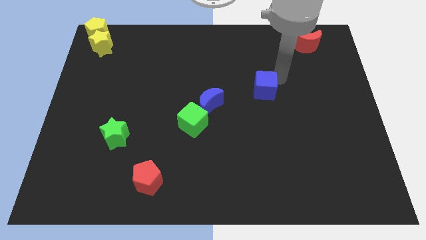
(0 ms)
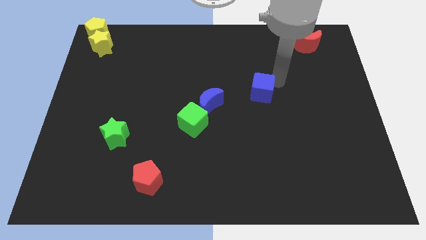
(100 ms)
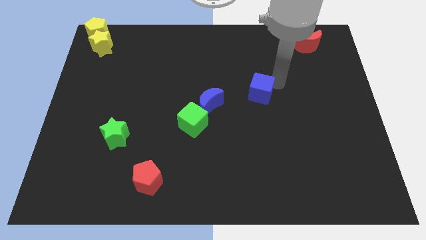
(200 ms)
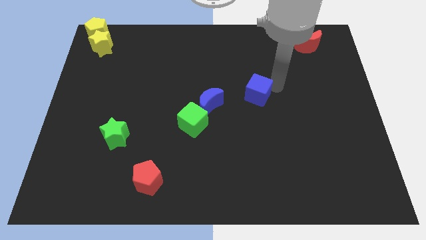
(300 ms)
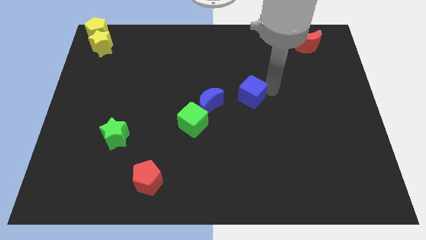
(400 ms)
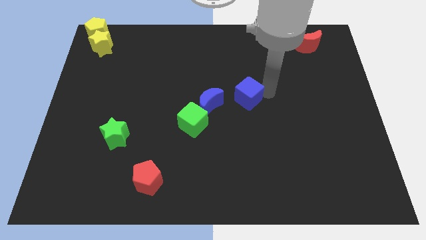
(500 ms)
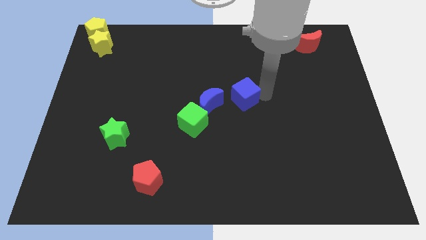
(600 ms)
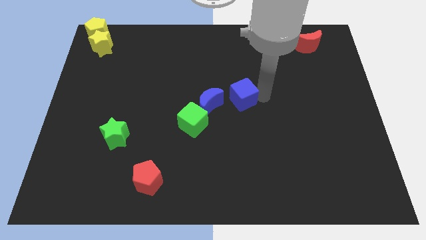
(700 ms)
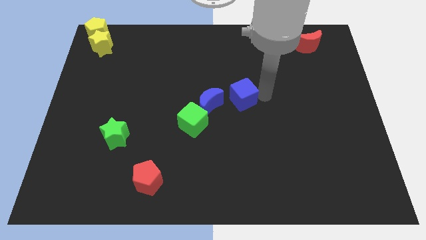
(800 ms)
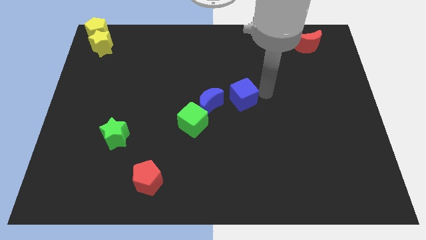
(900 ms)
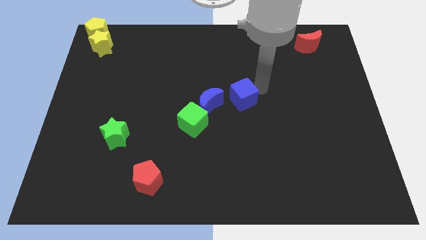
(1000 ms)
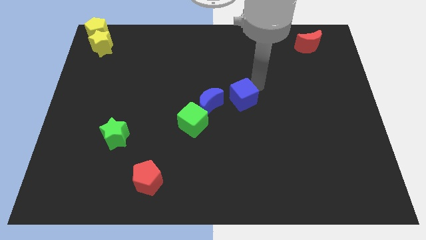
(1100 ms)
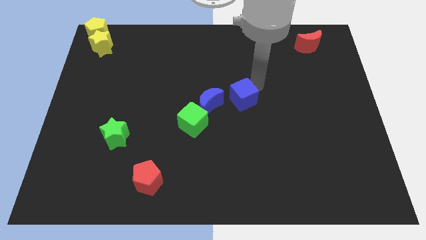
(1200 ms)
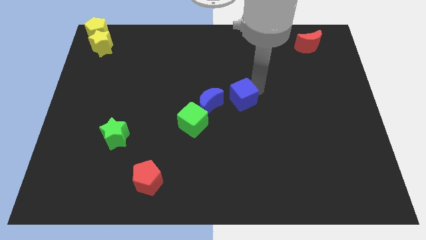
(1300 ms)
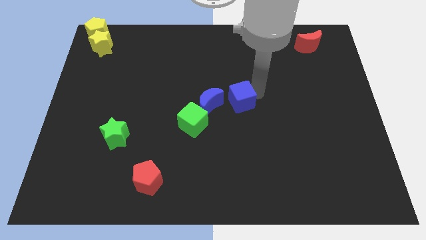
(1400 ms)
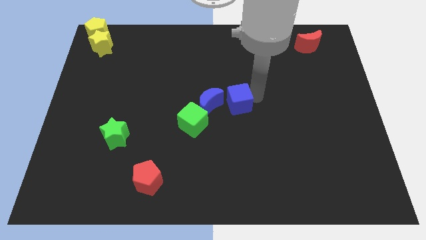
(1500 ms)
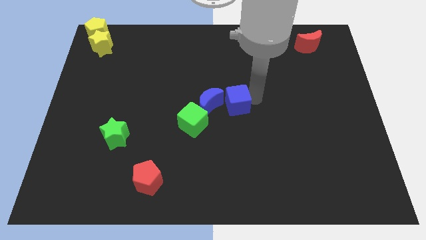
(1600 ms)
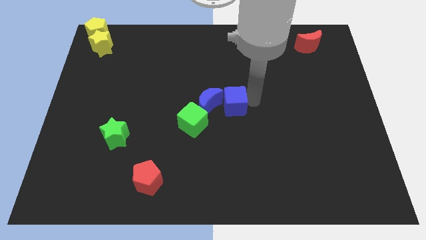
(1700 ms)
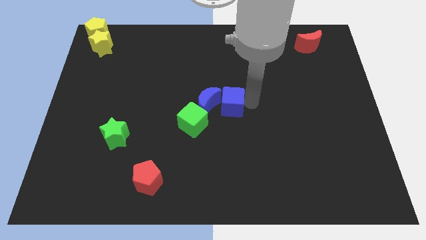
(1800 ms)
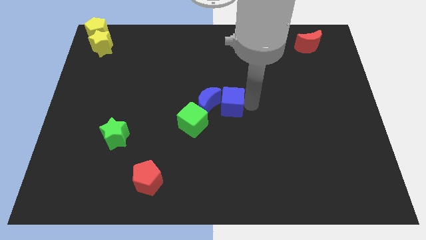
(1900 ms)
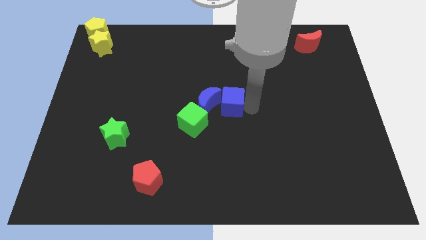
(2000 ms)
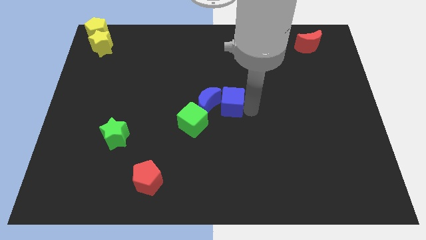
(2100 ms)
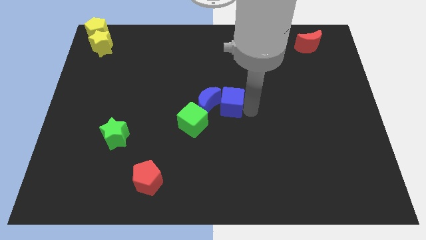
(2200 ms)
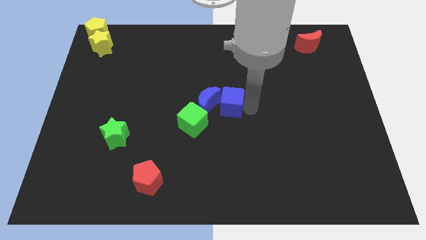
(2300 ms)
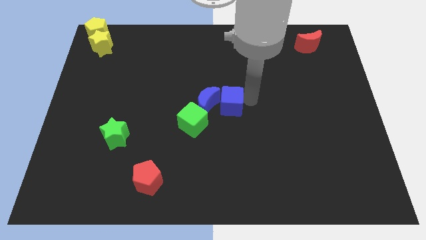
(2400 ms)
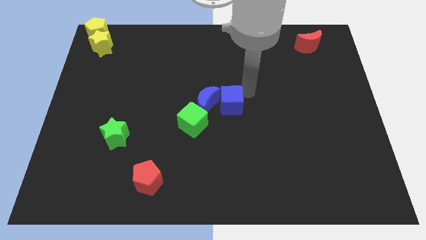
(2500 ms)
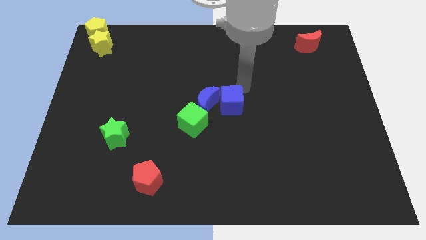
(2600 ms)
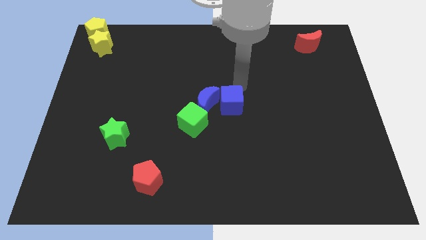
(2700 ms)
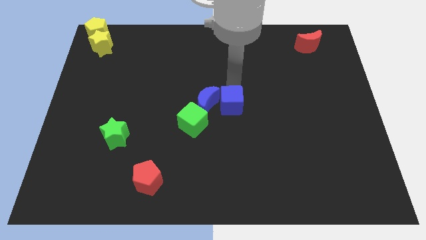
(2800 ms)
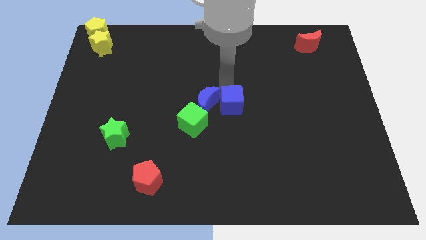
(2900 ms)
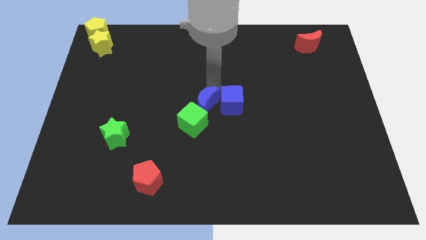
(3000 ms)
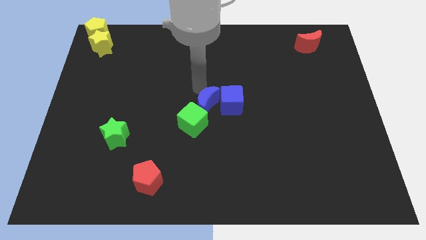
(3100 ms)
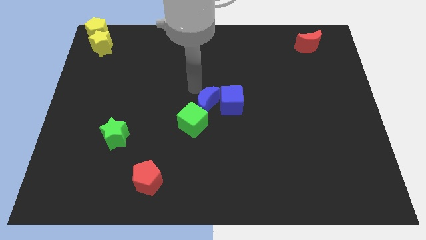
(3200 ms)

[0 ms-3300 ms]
move blue cube right beside blue moon

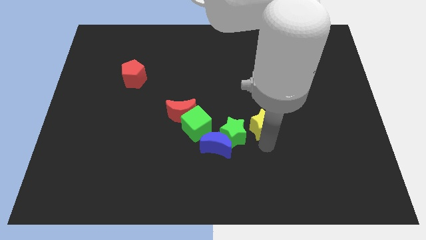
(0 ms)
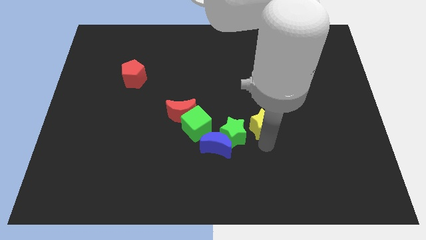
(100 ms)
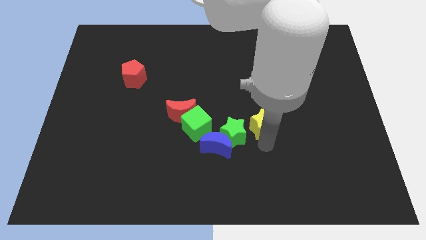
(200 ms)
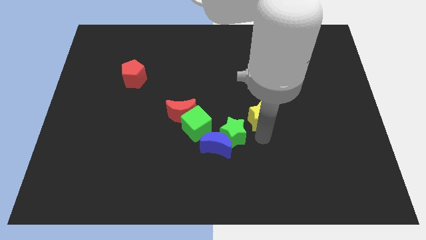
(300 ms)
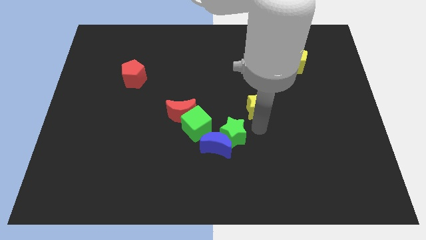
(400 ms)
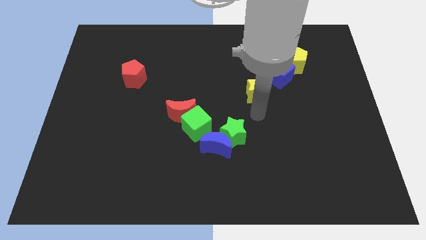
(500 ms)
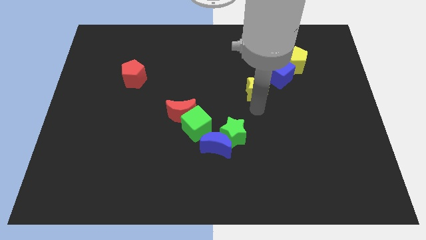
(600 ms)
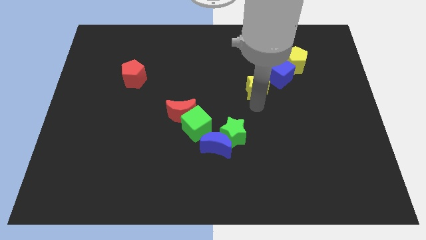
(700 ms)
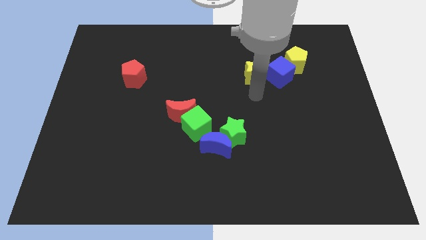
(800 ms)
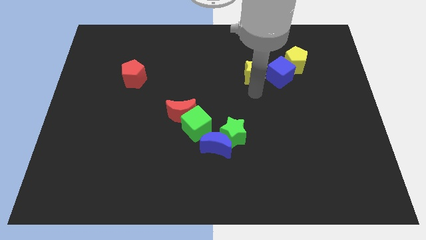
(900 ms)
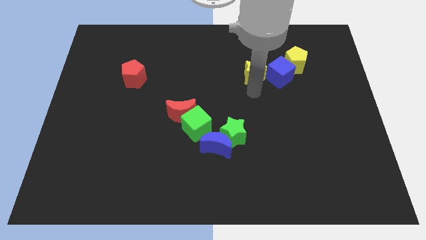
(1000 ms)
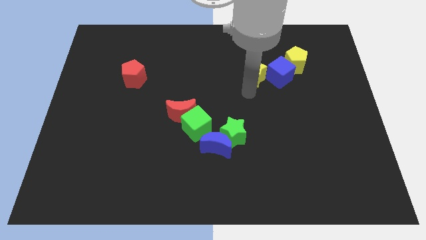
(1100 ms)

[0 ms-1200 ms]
push the yellow star to the left of the blue cube

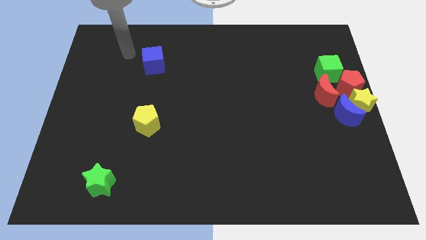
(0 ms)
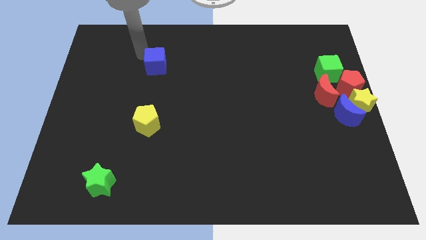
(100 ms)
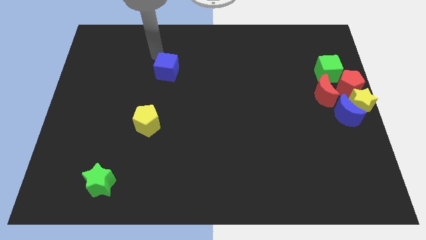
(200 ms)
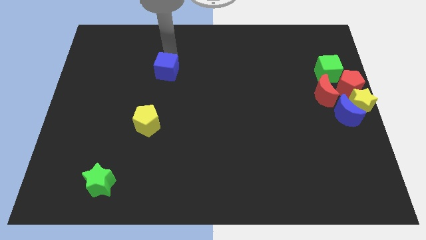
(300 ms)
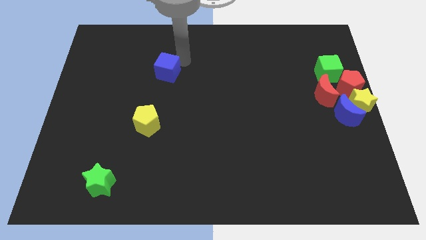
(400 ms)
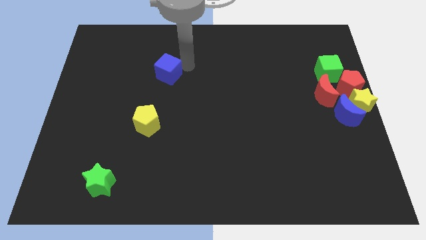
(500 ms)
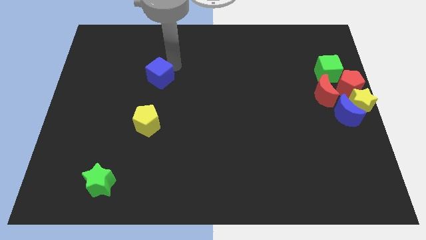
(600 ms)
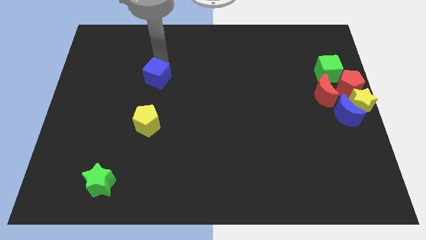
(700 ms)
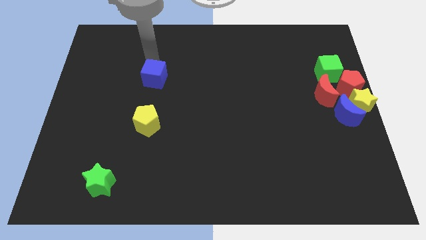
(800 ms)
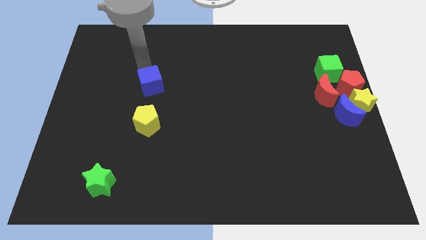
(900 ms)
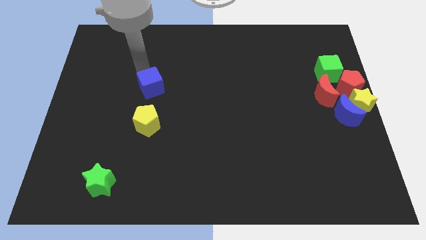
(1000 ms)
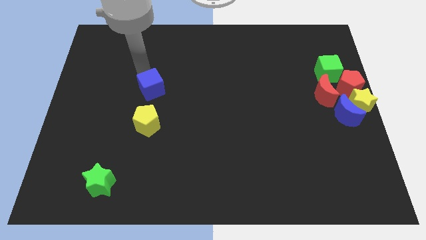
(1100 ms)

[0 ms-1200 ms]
move blue cube slightly down

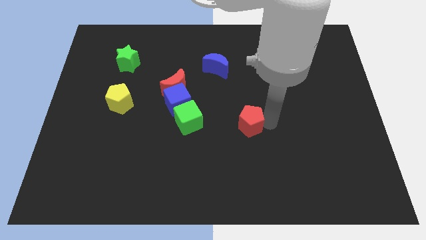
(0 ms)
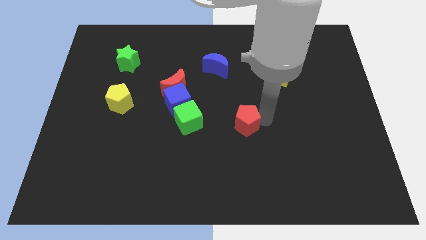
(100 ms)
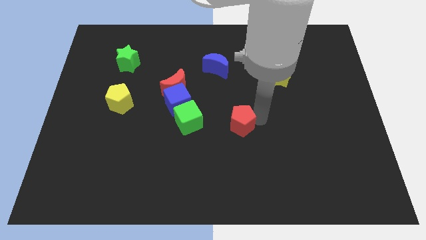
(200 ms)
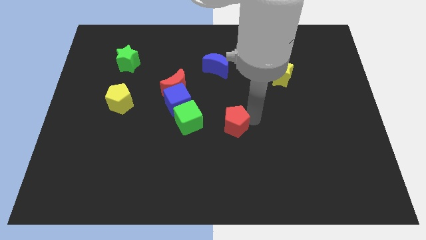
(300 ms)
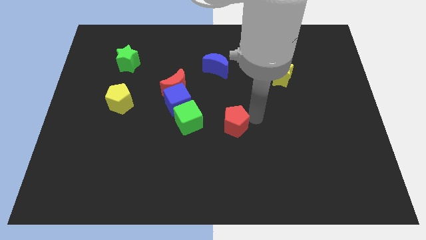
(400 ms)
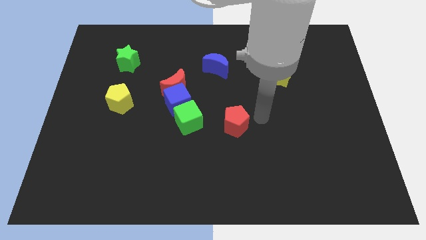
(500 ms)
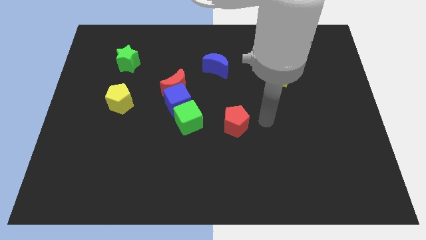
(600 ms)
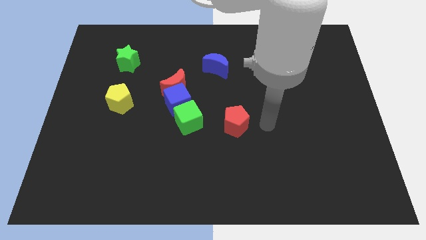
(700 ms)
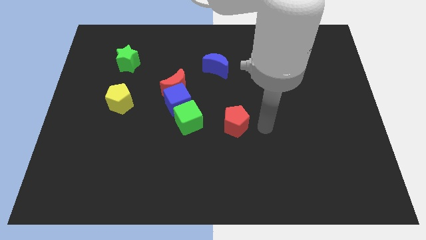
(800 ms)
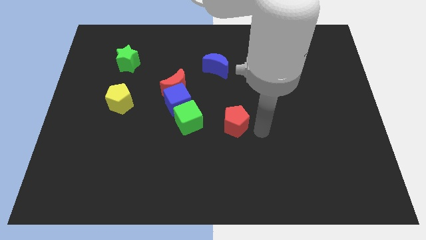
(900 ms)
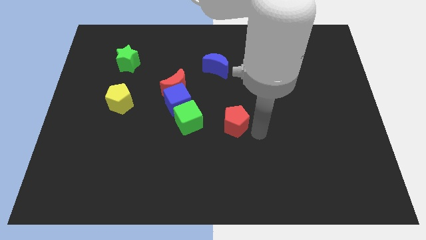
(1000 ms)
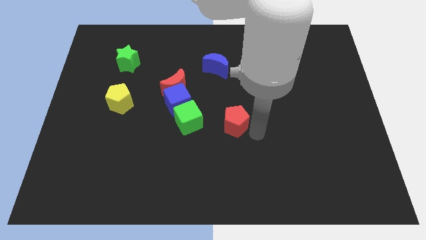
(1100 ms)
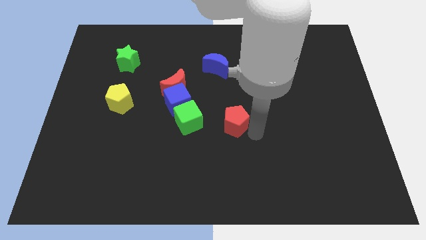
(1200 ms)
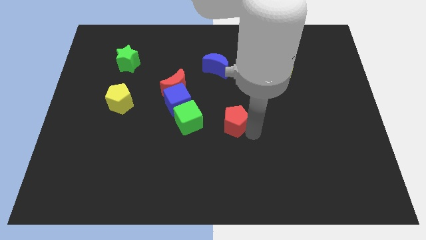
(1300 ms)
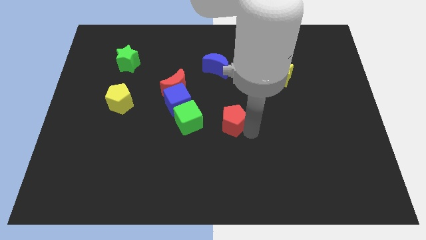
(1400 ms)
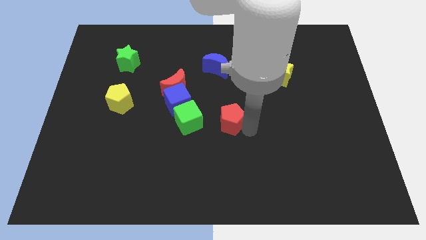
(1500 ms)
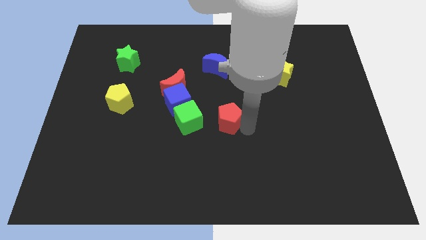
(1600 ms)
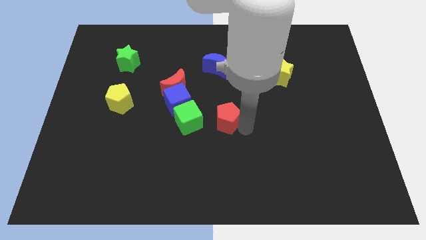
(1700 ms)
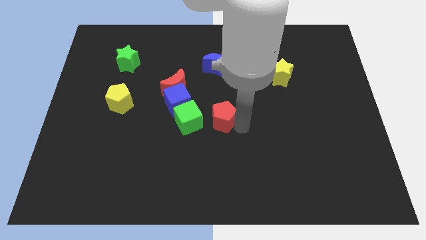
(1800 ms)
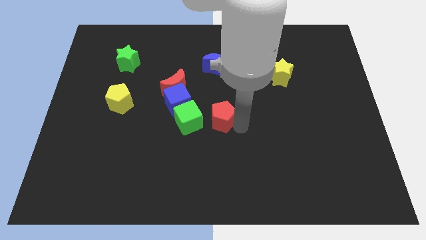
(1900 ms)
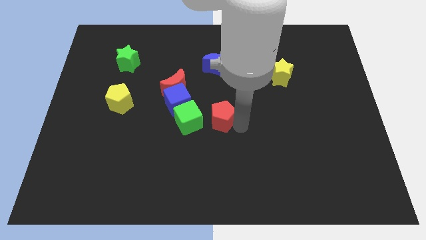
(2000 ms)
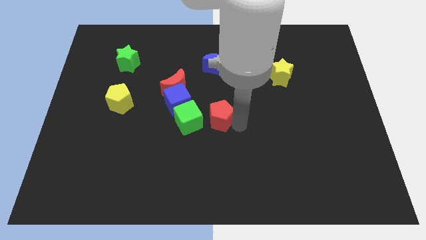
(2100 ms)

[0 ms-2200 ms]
move the red pentagon towards the green cube

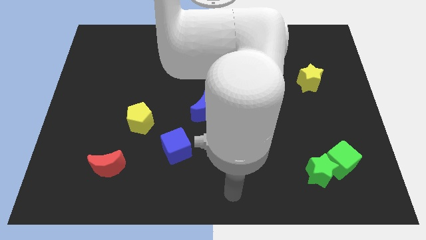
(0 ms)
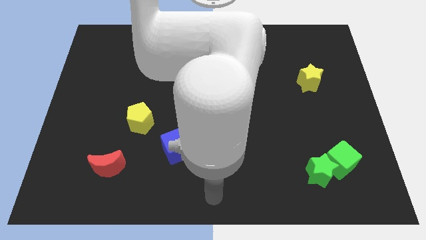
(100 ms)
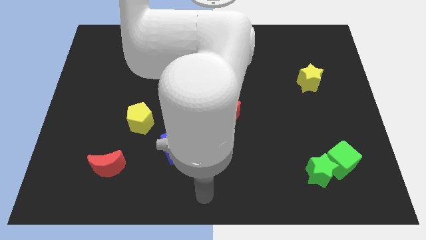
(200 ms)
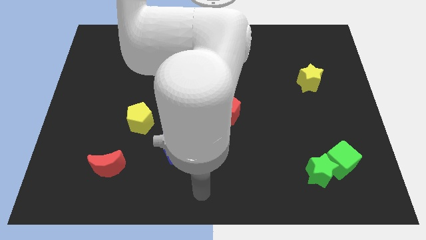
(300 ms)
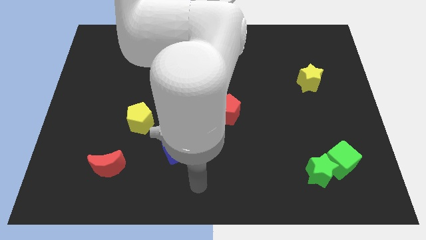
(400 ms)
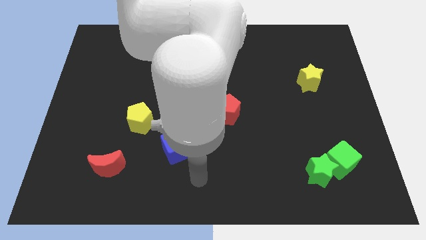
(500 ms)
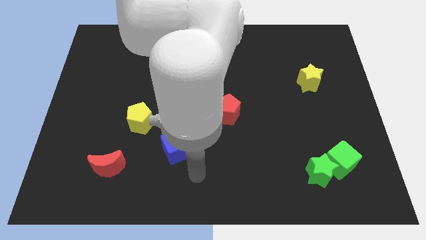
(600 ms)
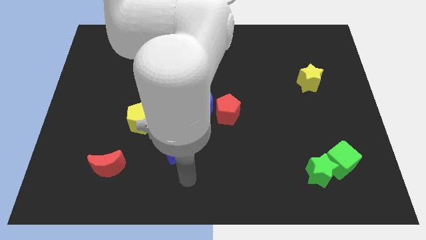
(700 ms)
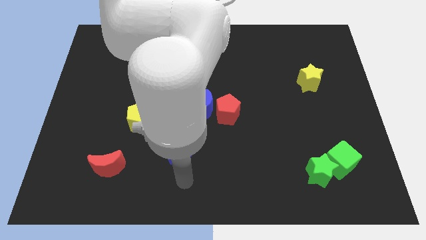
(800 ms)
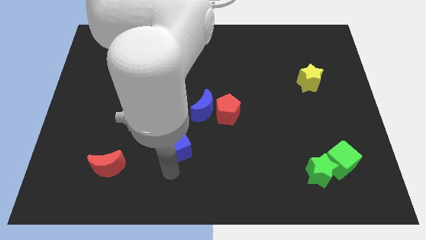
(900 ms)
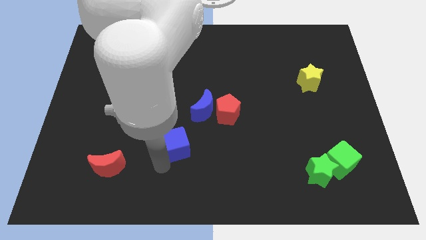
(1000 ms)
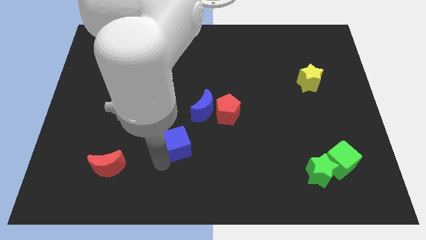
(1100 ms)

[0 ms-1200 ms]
touch the bottom of blue cube
